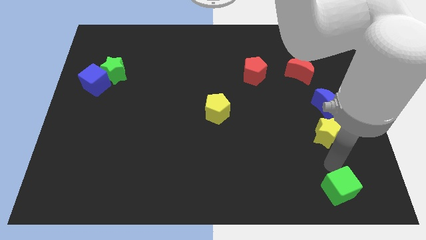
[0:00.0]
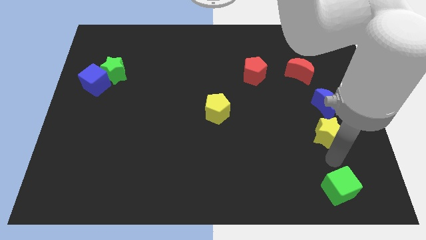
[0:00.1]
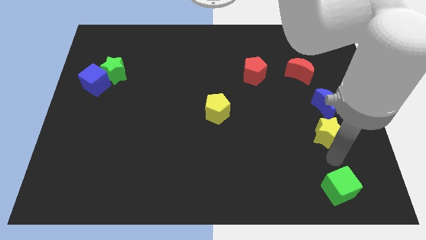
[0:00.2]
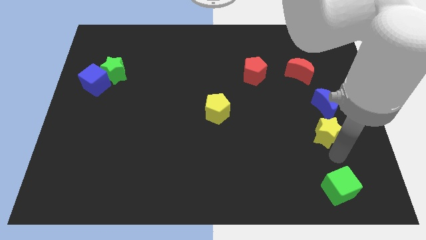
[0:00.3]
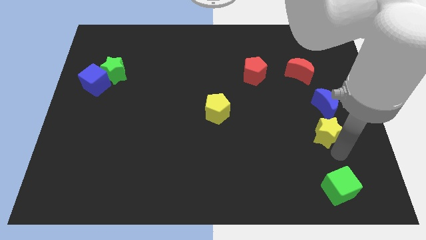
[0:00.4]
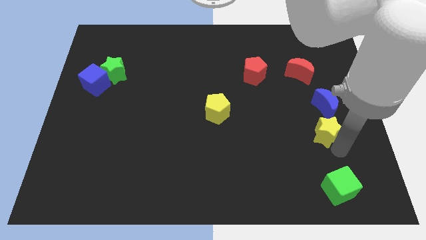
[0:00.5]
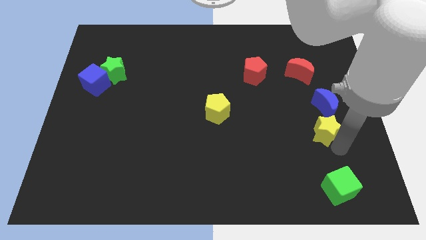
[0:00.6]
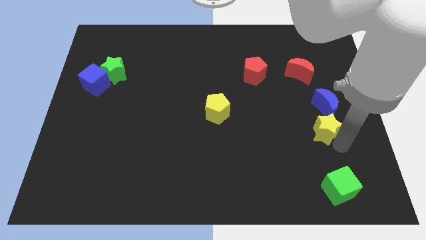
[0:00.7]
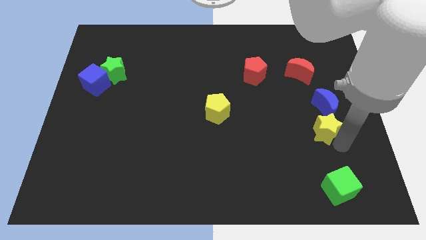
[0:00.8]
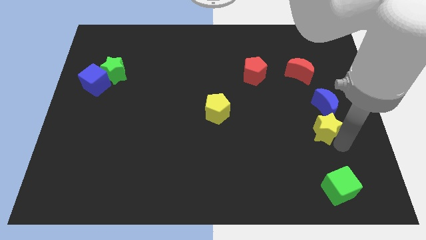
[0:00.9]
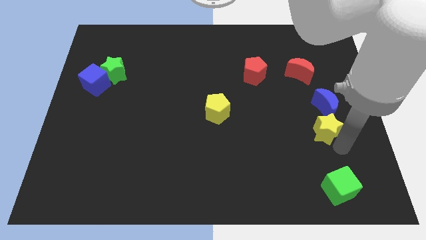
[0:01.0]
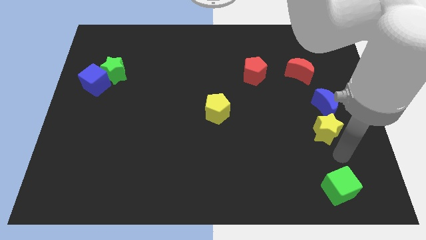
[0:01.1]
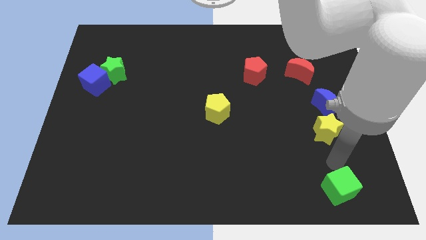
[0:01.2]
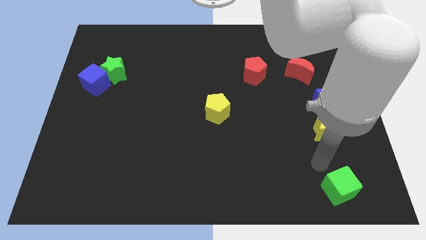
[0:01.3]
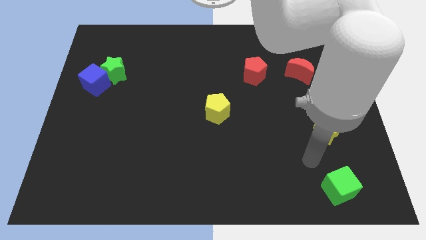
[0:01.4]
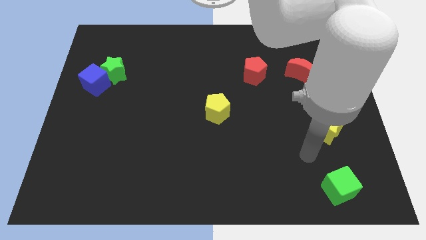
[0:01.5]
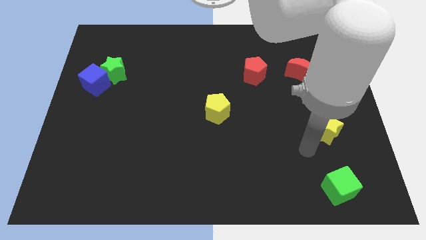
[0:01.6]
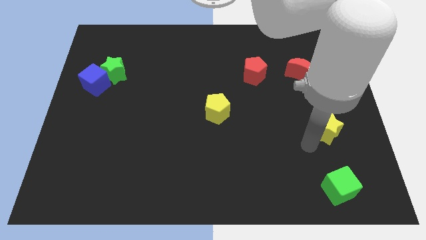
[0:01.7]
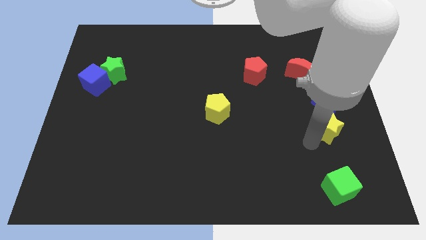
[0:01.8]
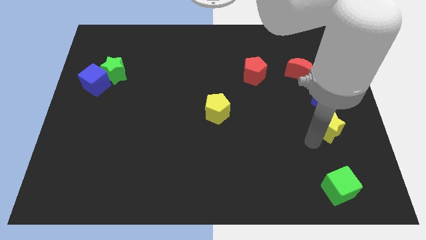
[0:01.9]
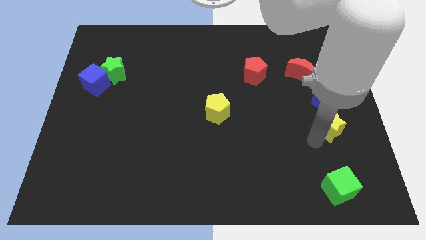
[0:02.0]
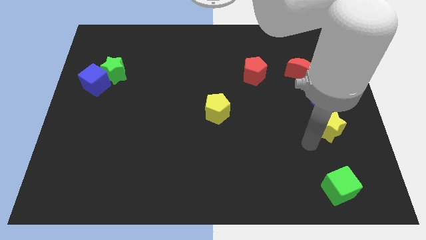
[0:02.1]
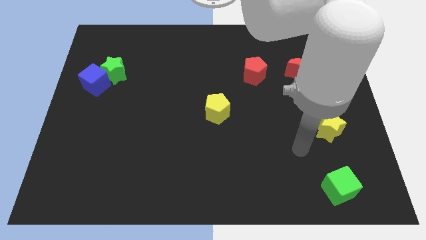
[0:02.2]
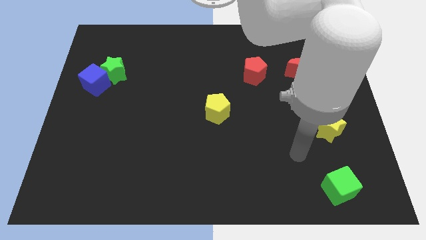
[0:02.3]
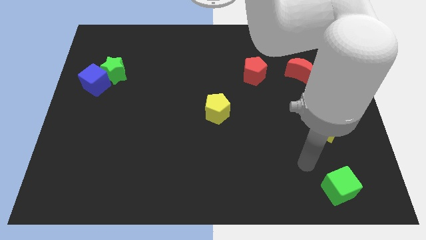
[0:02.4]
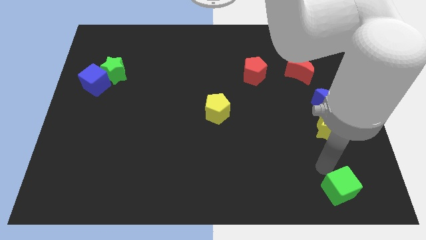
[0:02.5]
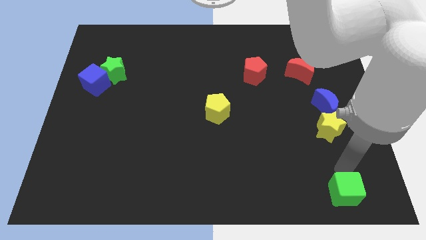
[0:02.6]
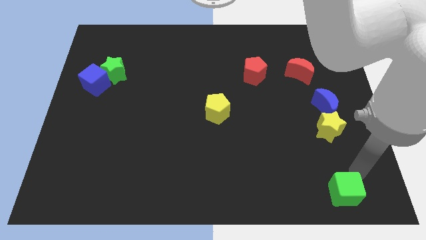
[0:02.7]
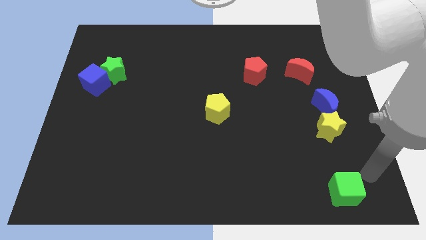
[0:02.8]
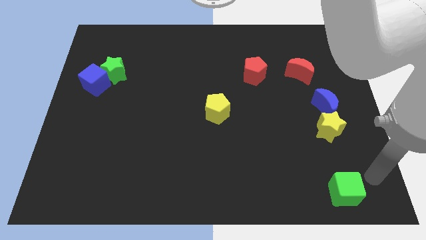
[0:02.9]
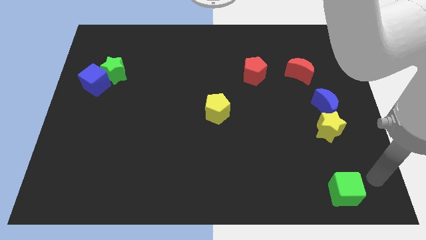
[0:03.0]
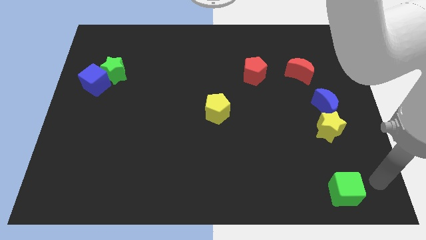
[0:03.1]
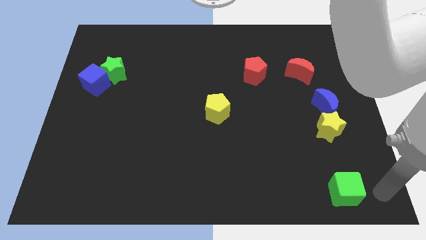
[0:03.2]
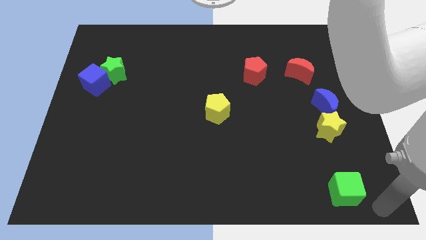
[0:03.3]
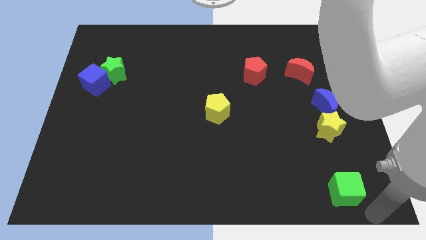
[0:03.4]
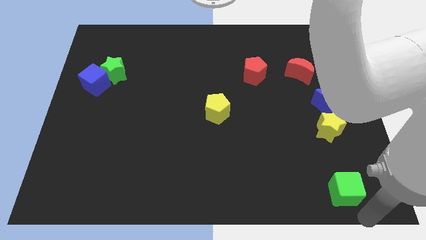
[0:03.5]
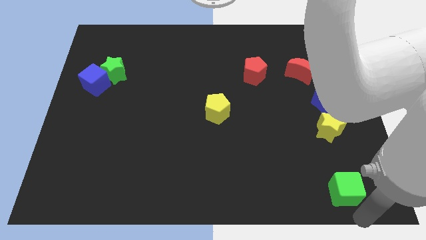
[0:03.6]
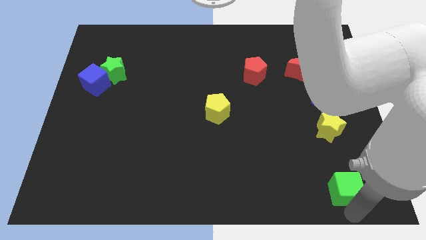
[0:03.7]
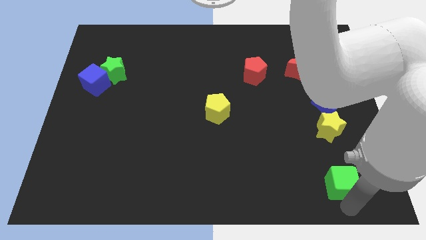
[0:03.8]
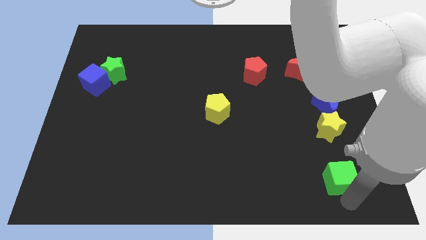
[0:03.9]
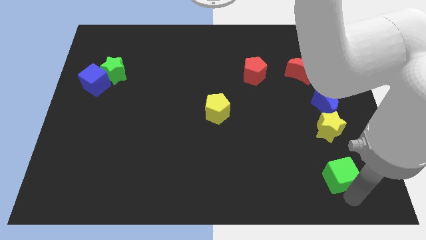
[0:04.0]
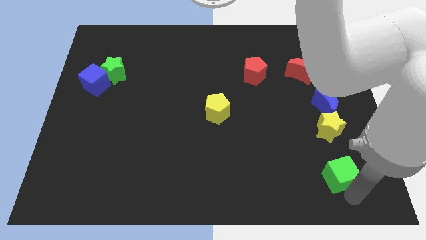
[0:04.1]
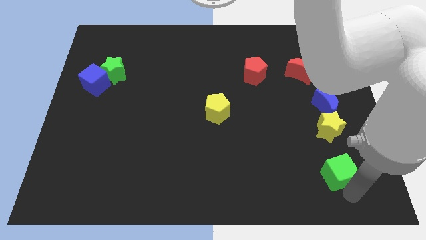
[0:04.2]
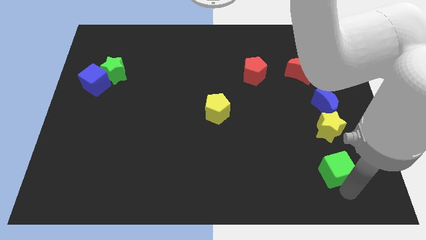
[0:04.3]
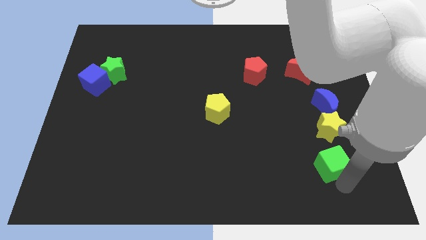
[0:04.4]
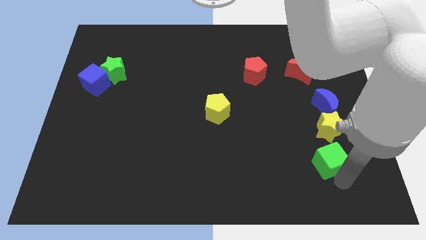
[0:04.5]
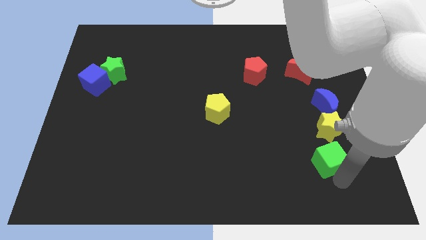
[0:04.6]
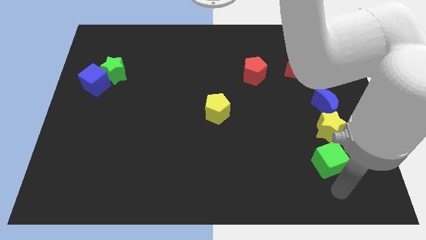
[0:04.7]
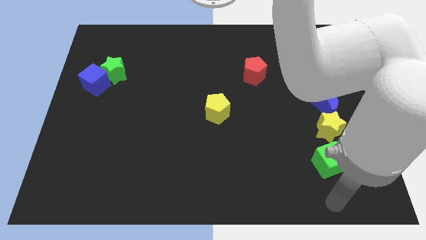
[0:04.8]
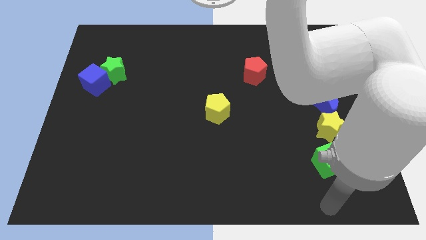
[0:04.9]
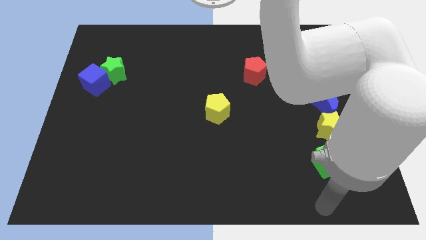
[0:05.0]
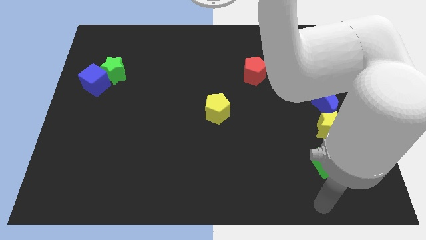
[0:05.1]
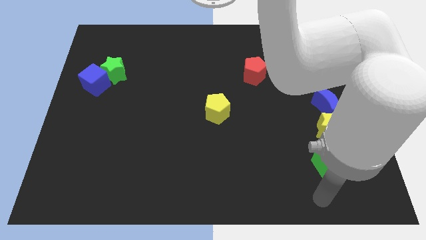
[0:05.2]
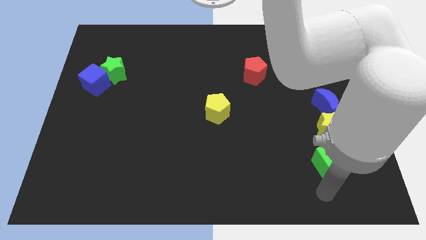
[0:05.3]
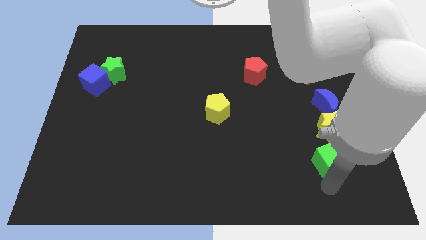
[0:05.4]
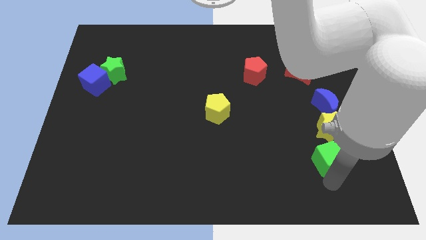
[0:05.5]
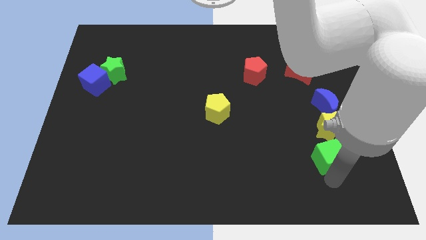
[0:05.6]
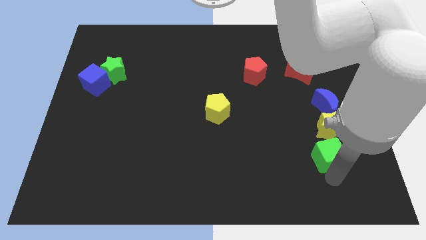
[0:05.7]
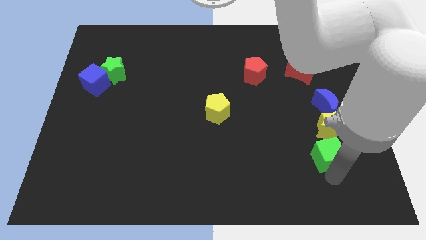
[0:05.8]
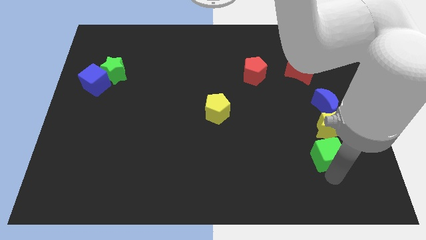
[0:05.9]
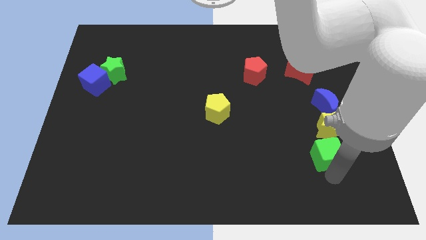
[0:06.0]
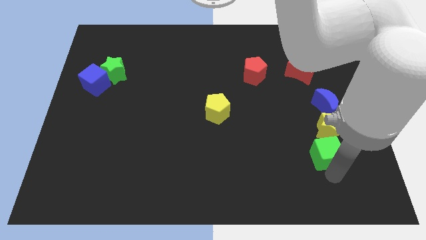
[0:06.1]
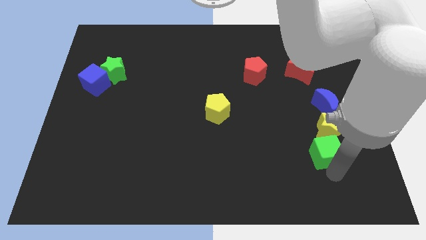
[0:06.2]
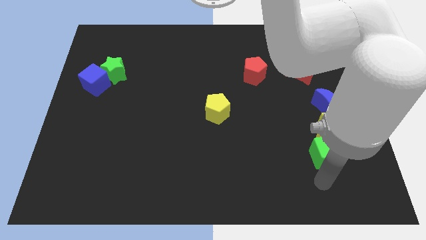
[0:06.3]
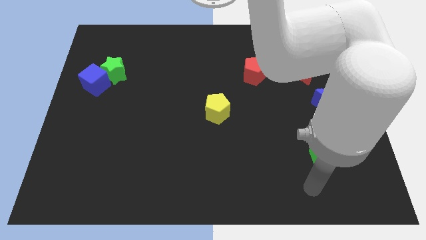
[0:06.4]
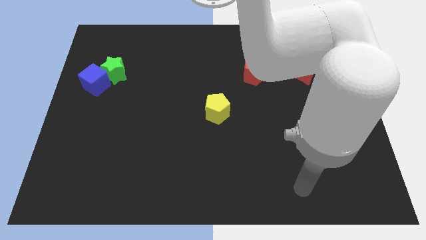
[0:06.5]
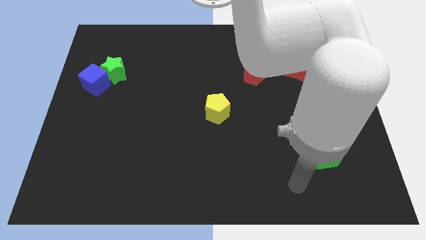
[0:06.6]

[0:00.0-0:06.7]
move the green cube below the yellow star

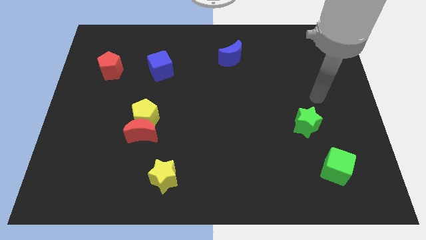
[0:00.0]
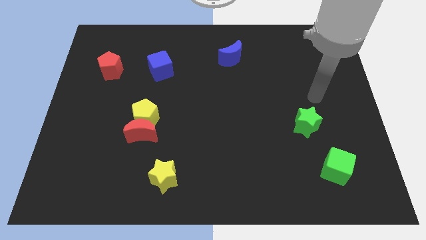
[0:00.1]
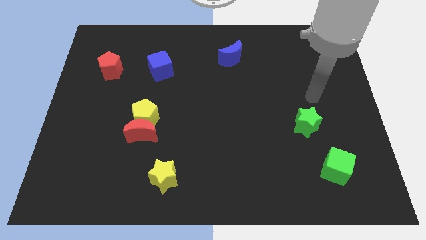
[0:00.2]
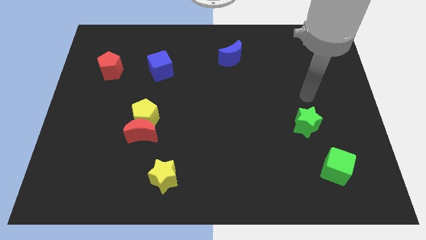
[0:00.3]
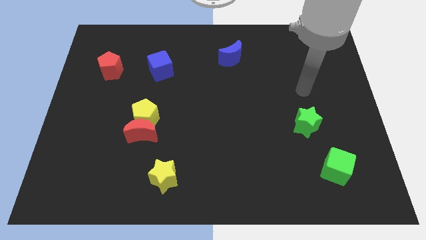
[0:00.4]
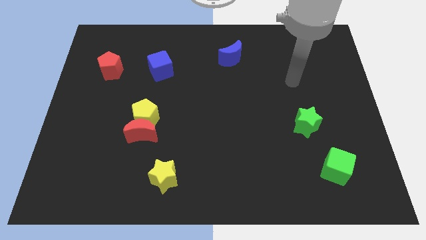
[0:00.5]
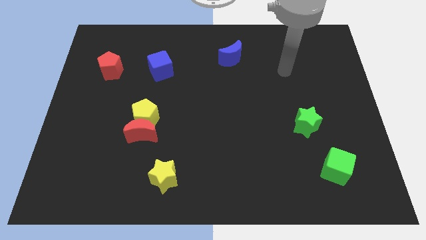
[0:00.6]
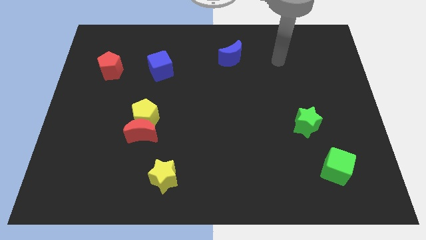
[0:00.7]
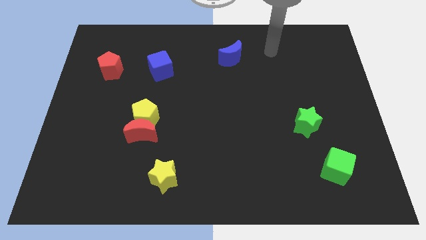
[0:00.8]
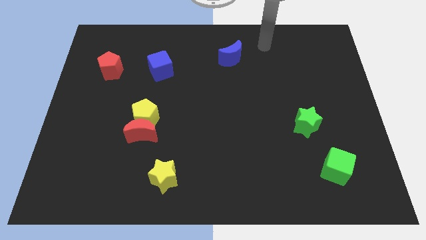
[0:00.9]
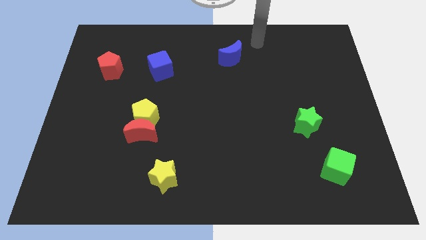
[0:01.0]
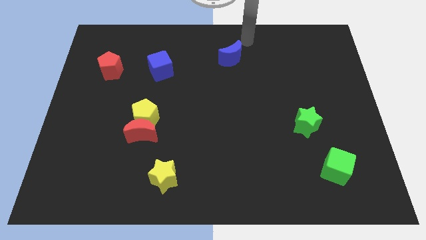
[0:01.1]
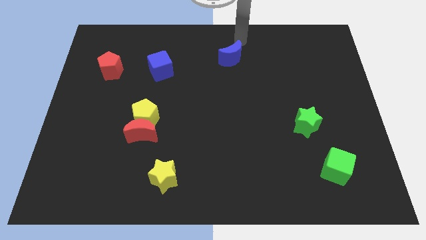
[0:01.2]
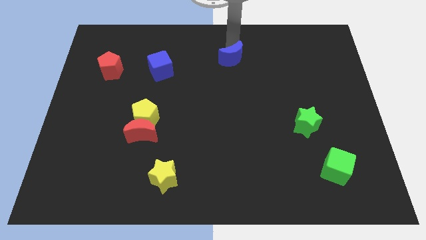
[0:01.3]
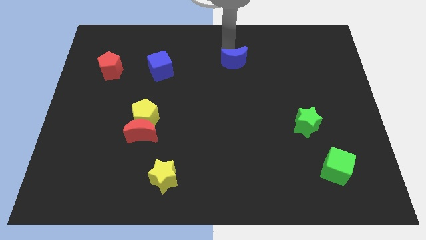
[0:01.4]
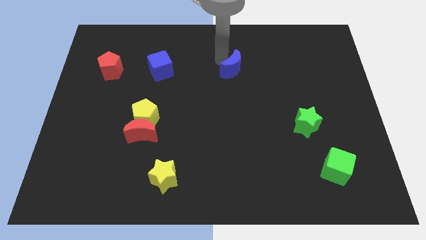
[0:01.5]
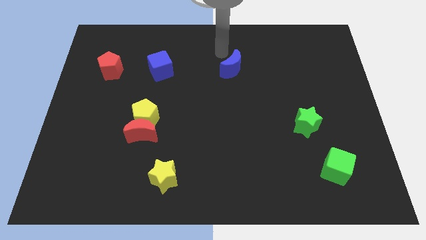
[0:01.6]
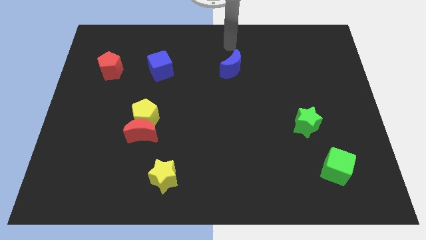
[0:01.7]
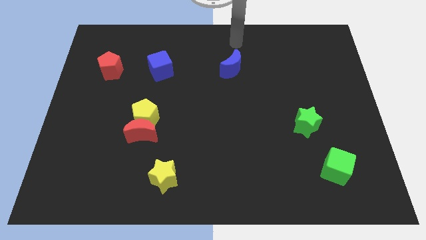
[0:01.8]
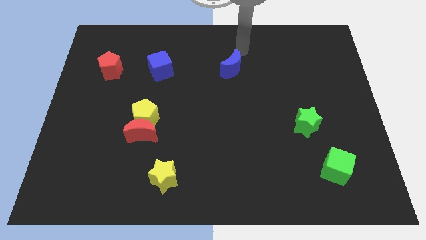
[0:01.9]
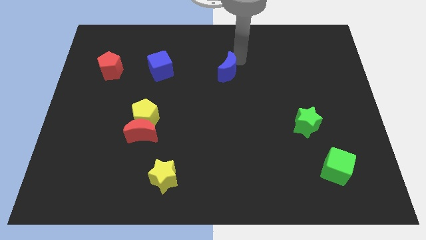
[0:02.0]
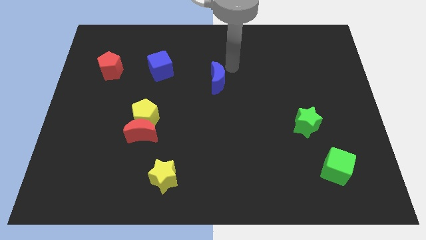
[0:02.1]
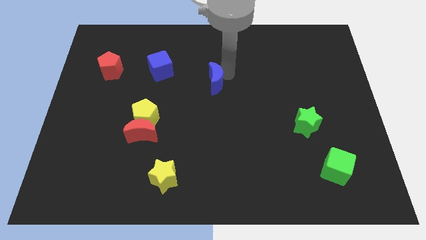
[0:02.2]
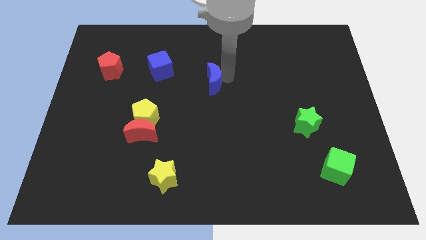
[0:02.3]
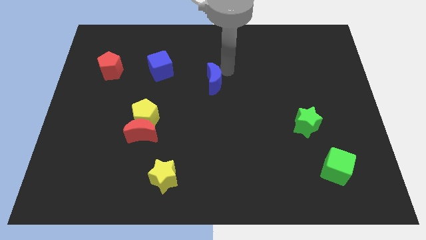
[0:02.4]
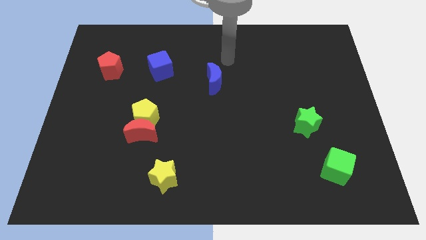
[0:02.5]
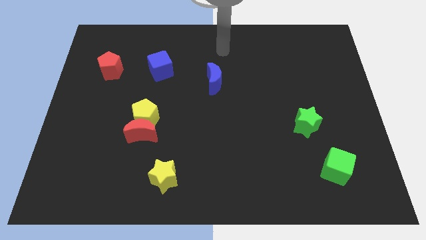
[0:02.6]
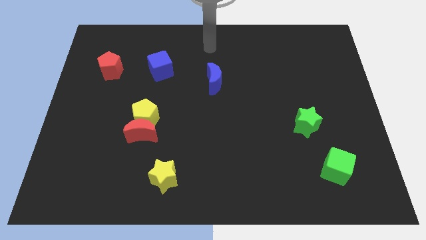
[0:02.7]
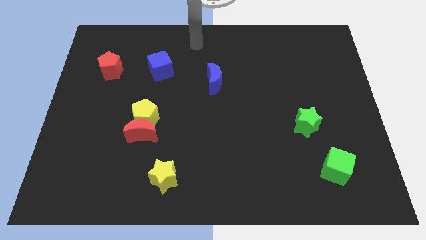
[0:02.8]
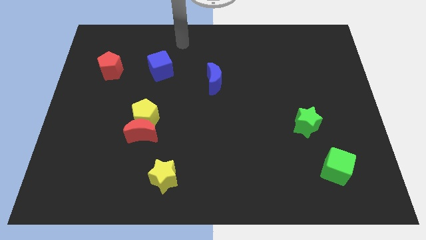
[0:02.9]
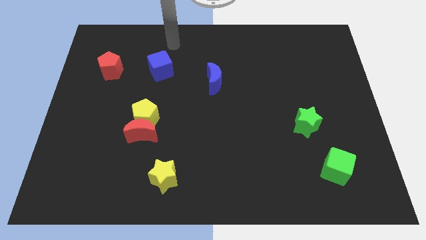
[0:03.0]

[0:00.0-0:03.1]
slide the blue moon diagonally bottom right to the blue cube
